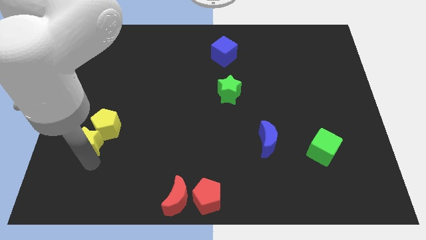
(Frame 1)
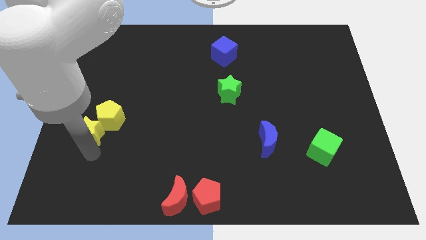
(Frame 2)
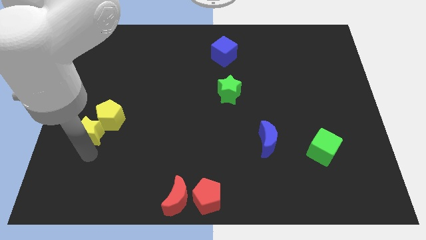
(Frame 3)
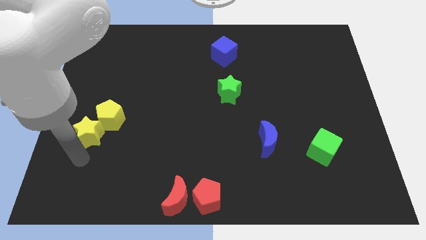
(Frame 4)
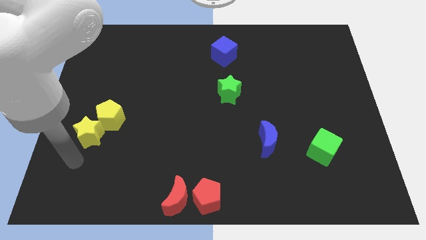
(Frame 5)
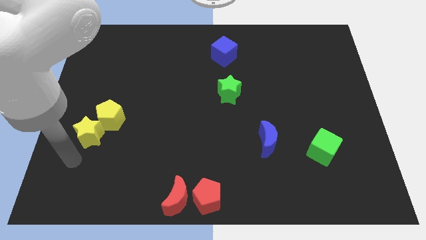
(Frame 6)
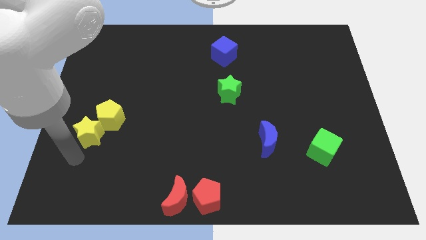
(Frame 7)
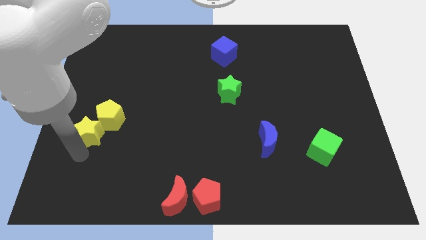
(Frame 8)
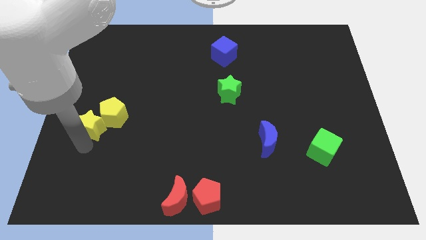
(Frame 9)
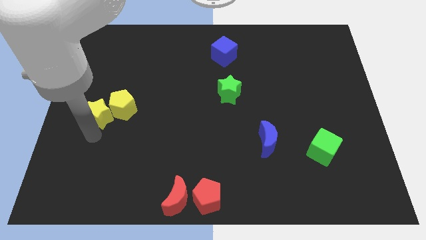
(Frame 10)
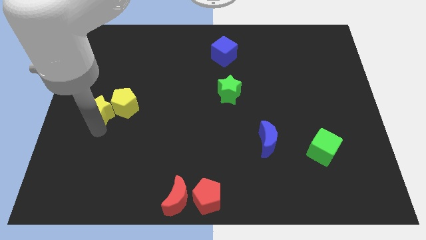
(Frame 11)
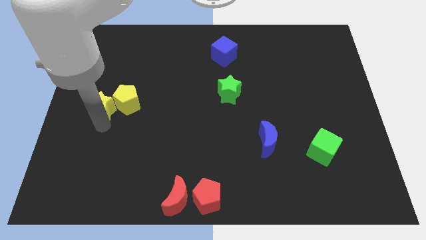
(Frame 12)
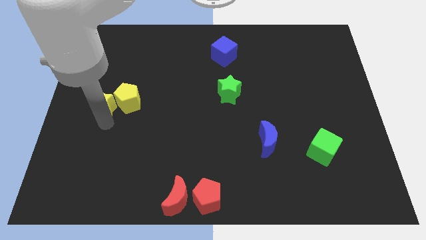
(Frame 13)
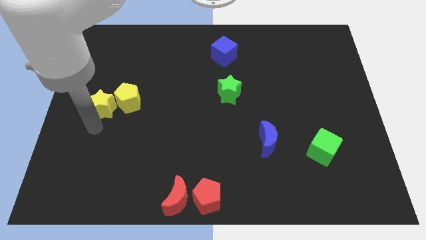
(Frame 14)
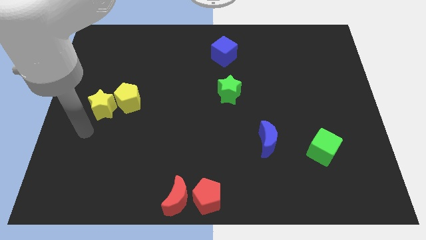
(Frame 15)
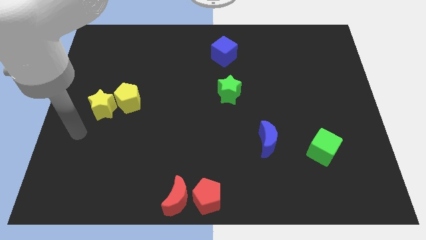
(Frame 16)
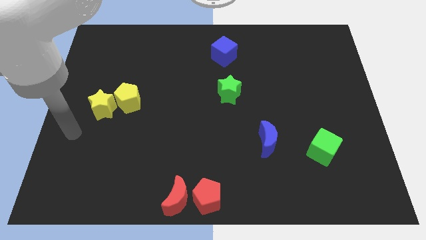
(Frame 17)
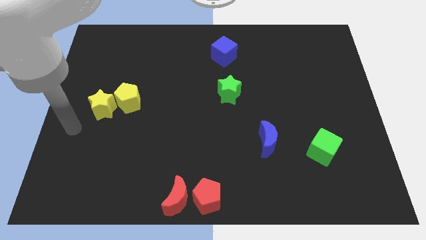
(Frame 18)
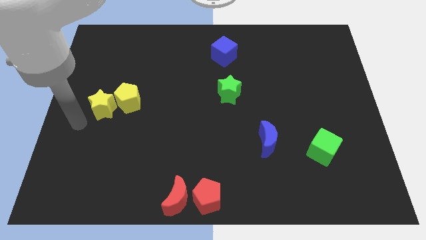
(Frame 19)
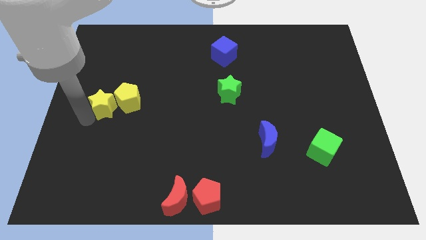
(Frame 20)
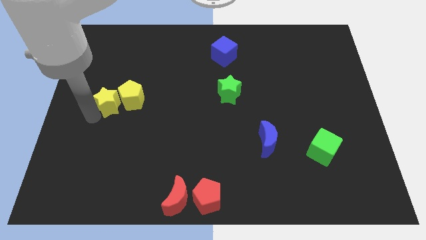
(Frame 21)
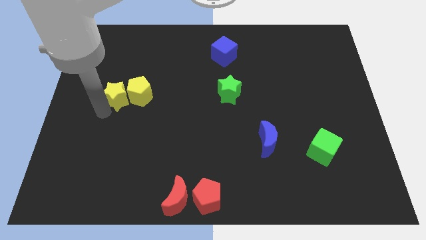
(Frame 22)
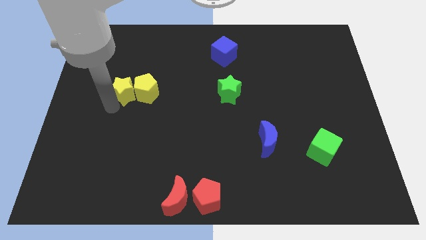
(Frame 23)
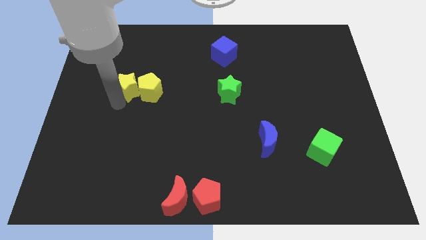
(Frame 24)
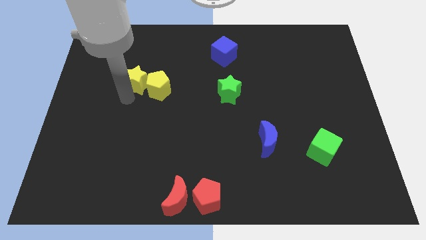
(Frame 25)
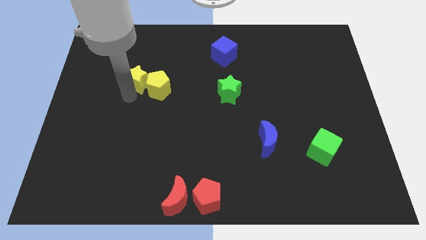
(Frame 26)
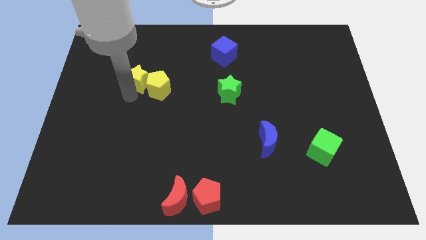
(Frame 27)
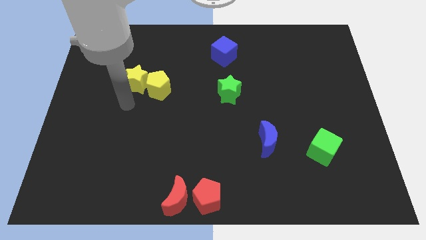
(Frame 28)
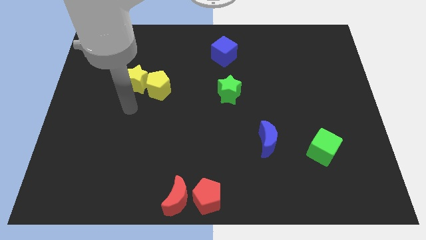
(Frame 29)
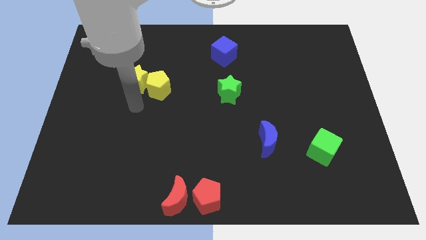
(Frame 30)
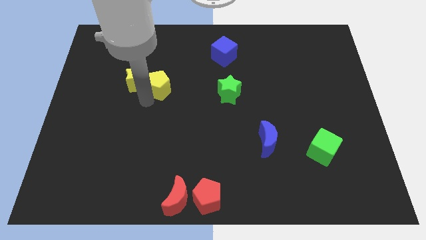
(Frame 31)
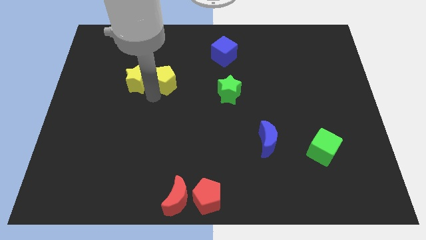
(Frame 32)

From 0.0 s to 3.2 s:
place the yellow star and yellow pentagon to the left of green star

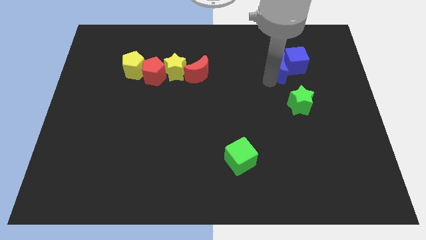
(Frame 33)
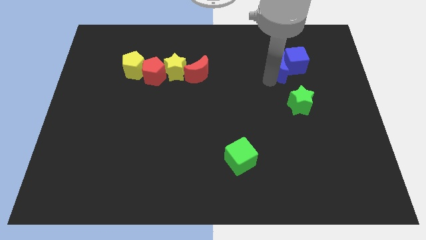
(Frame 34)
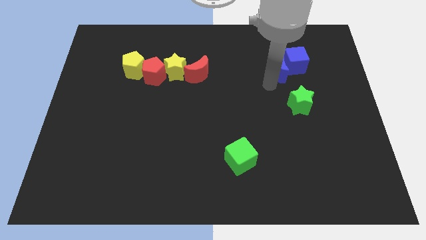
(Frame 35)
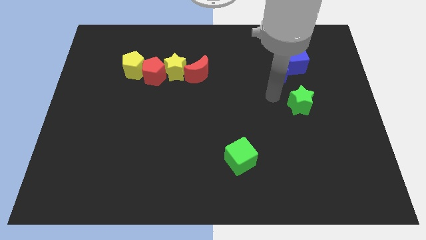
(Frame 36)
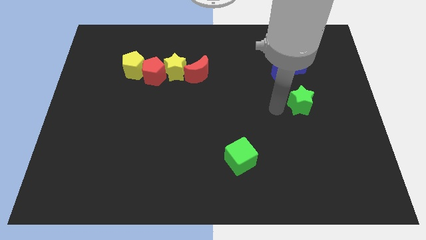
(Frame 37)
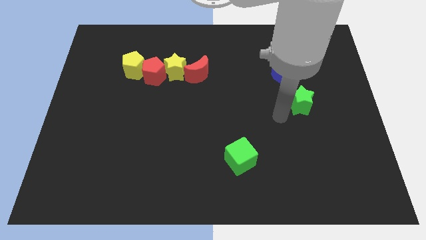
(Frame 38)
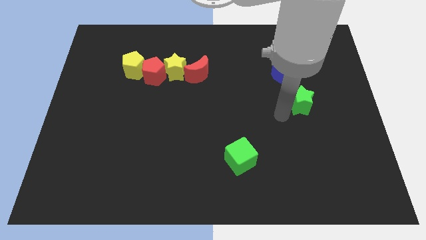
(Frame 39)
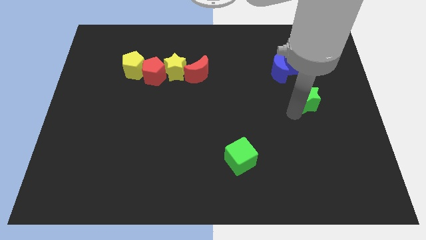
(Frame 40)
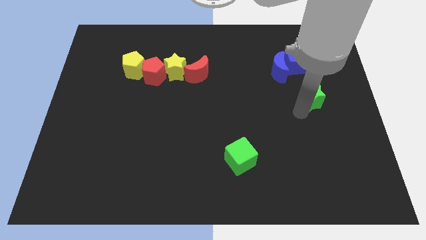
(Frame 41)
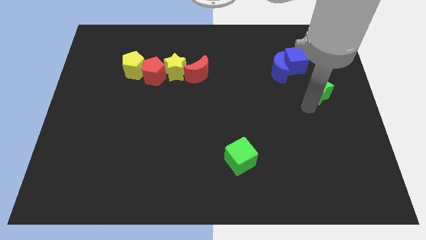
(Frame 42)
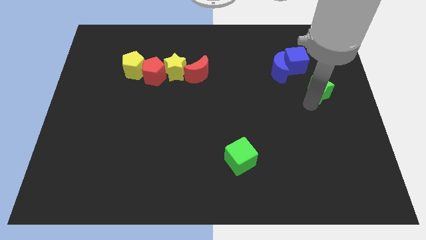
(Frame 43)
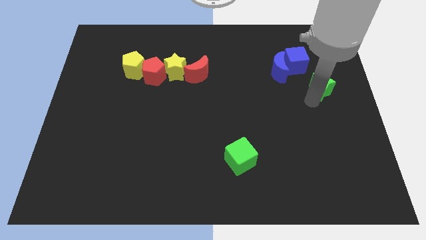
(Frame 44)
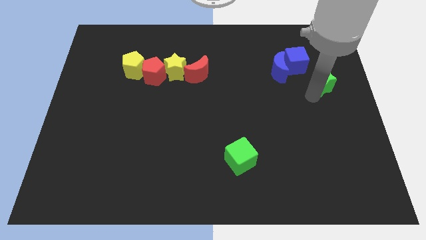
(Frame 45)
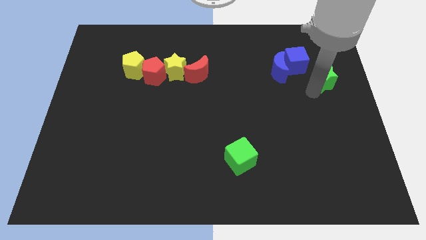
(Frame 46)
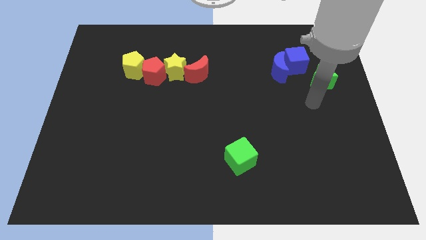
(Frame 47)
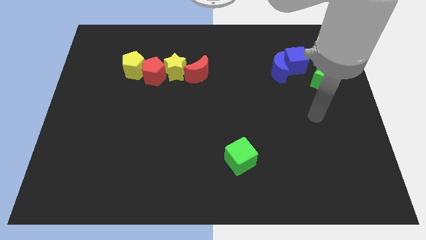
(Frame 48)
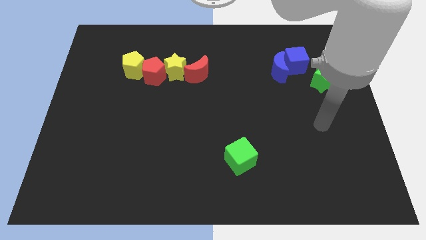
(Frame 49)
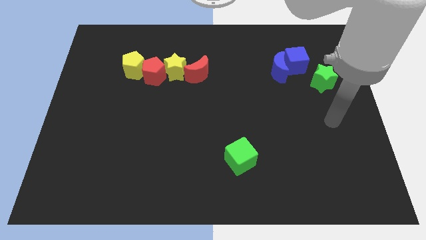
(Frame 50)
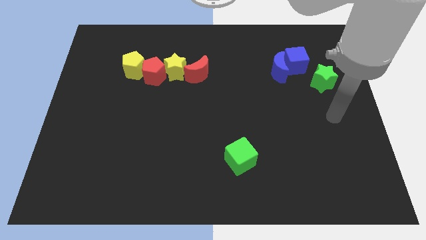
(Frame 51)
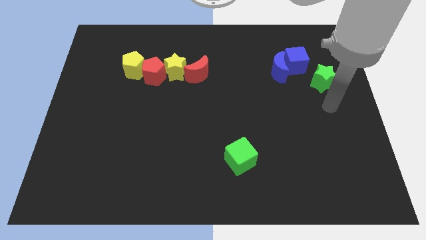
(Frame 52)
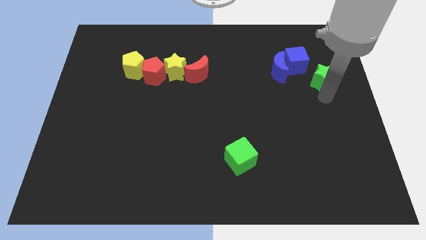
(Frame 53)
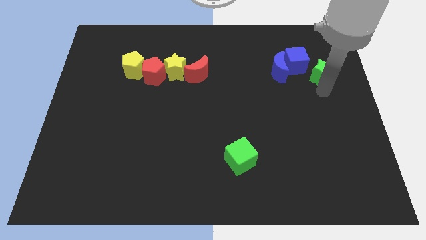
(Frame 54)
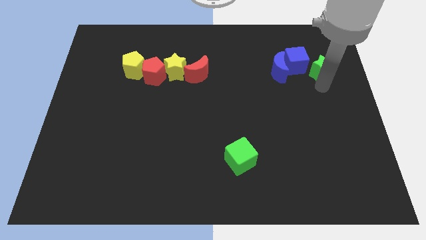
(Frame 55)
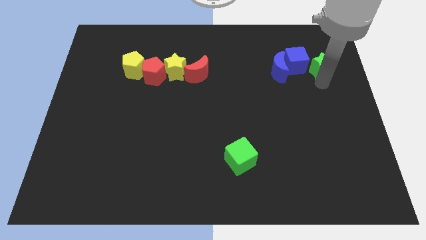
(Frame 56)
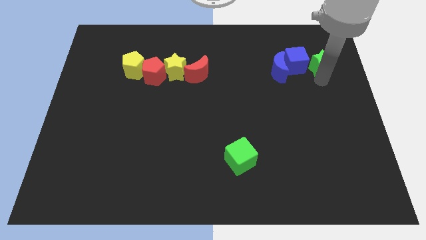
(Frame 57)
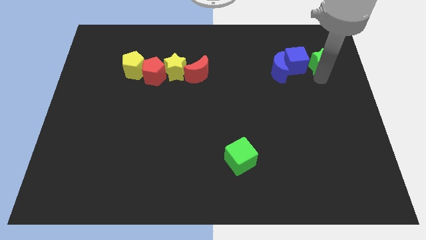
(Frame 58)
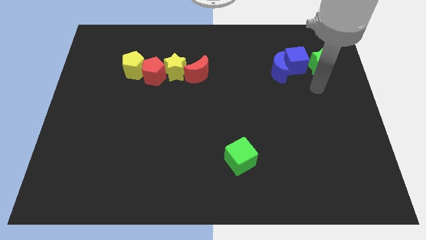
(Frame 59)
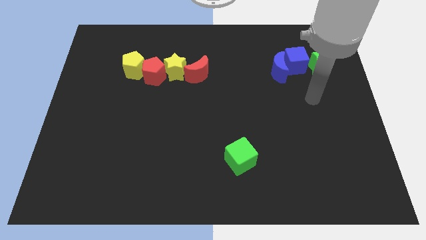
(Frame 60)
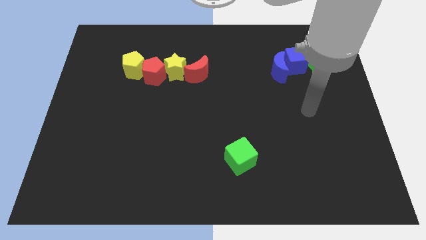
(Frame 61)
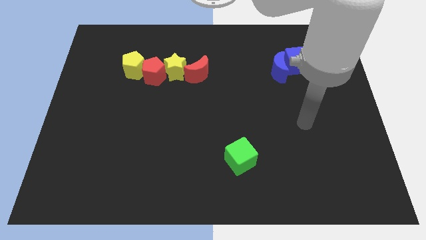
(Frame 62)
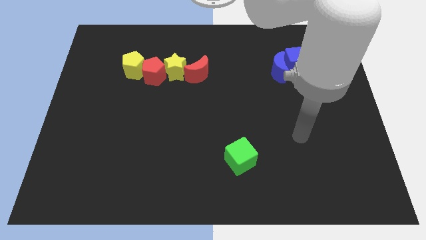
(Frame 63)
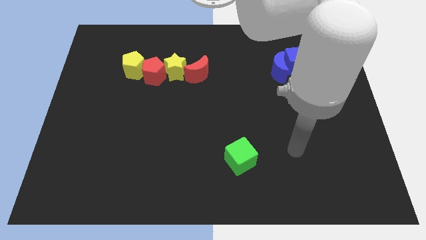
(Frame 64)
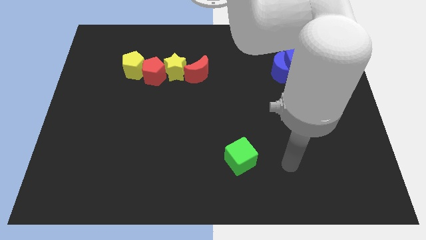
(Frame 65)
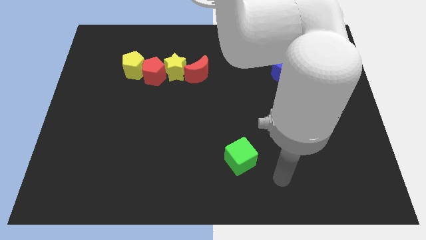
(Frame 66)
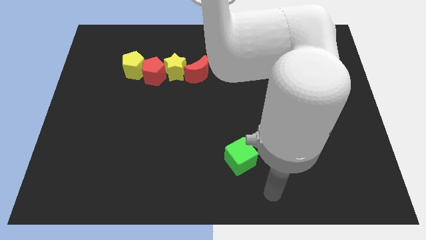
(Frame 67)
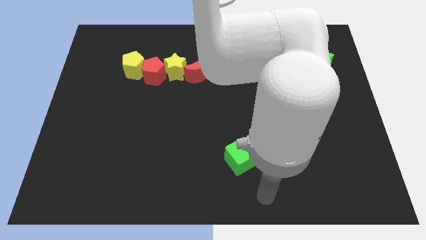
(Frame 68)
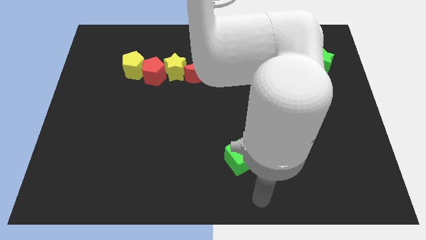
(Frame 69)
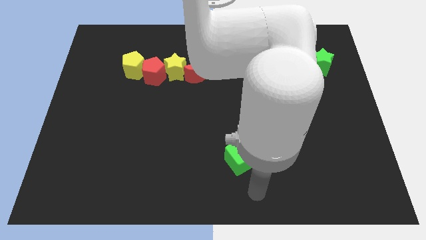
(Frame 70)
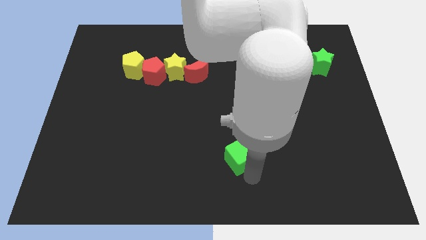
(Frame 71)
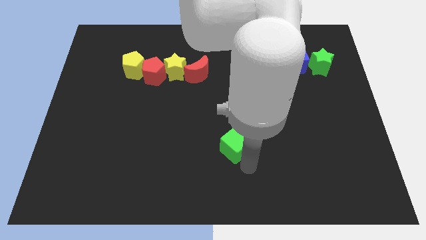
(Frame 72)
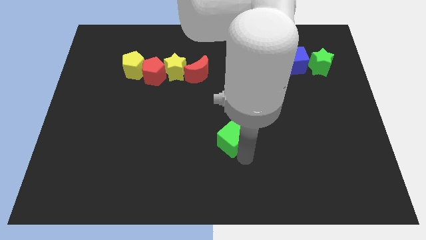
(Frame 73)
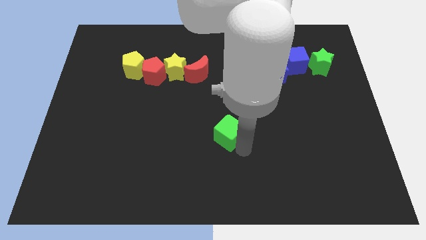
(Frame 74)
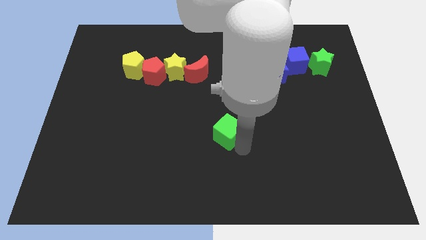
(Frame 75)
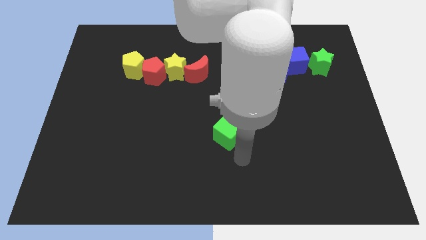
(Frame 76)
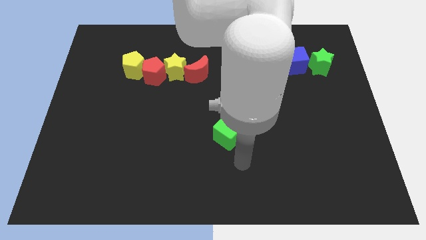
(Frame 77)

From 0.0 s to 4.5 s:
slightly move the green cube to the middle of the board

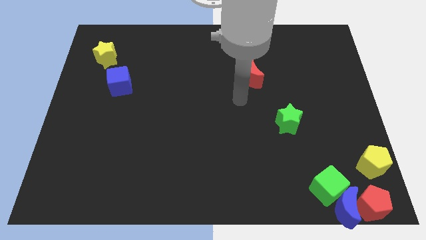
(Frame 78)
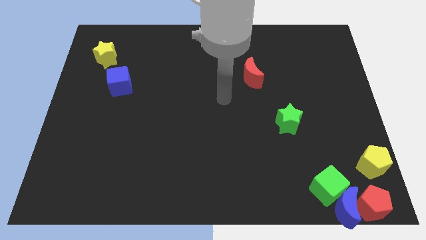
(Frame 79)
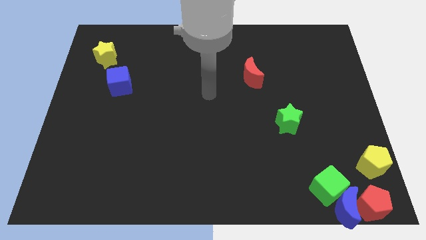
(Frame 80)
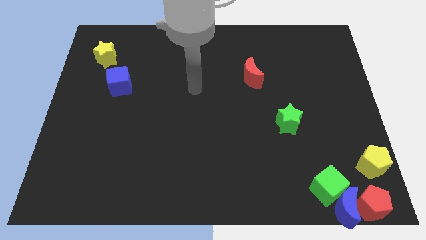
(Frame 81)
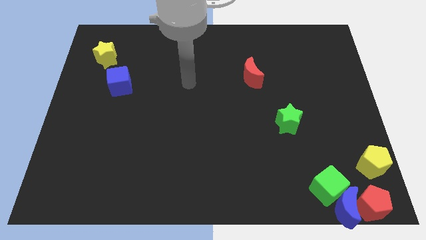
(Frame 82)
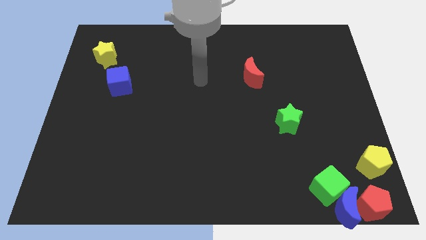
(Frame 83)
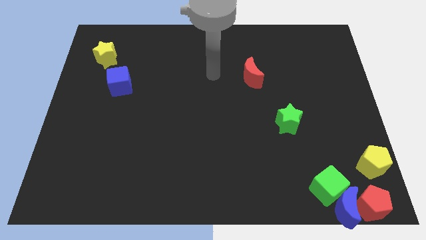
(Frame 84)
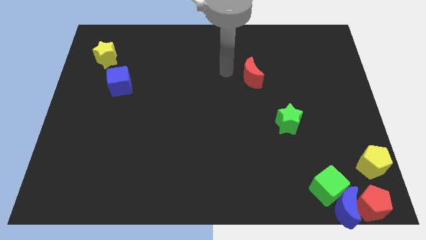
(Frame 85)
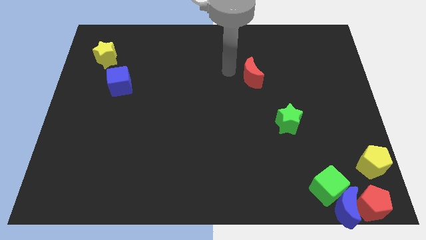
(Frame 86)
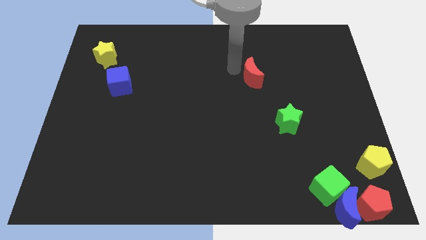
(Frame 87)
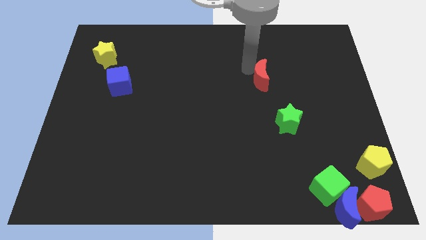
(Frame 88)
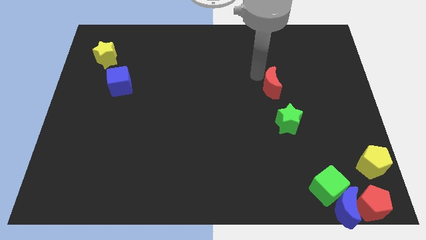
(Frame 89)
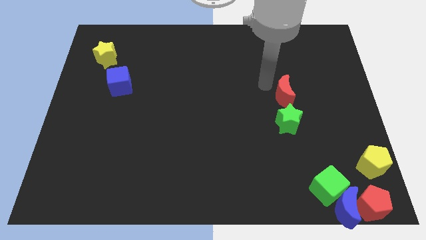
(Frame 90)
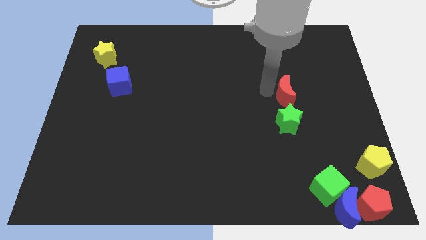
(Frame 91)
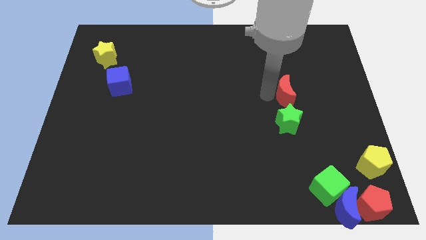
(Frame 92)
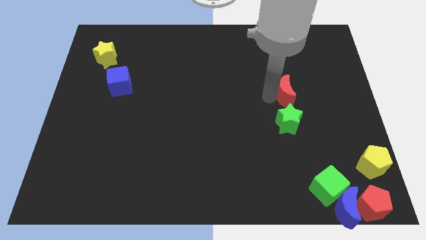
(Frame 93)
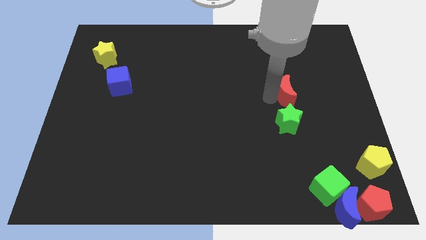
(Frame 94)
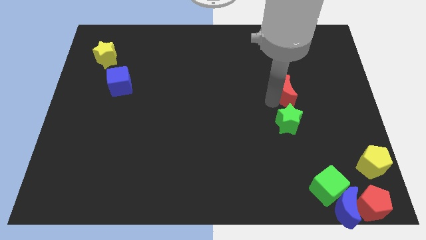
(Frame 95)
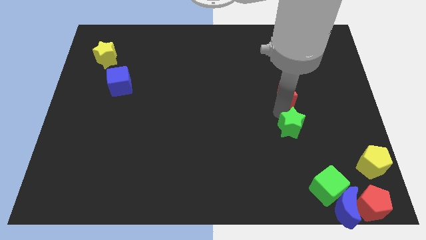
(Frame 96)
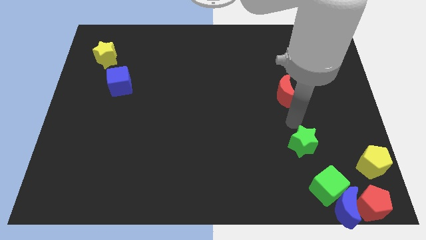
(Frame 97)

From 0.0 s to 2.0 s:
push the green star towards the green cube
